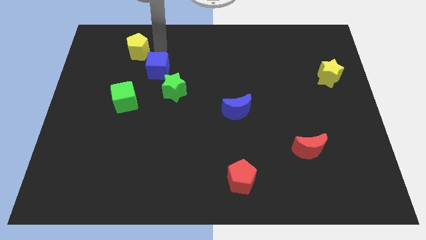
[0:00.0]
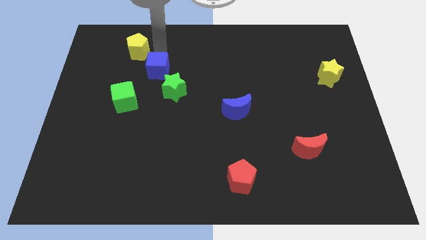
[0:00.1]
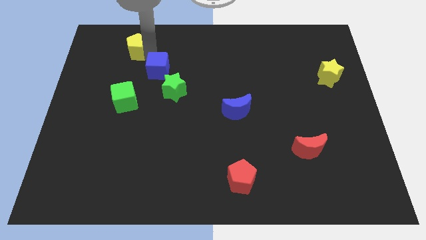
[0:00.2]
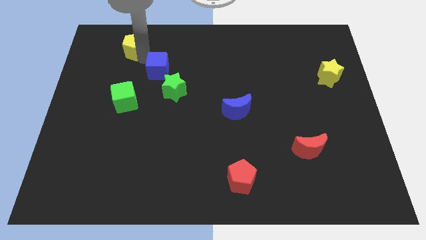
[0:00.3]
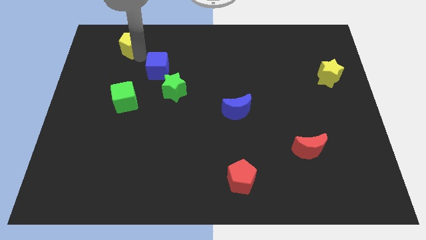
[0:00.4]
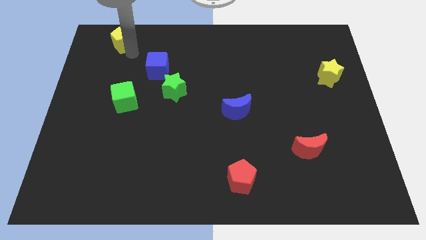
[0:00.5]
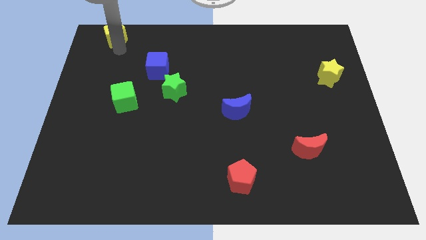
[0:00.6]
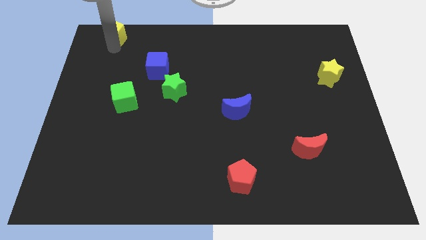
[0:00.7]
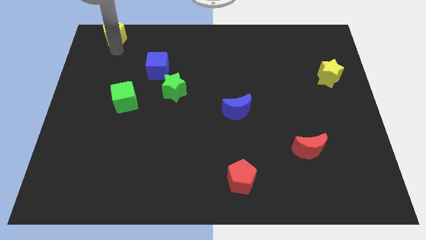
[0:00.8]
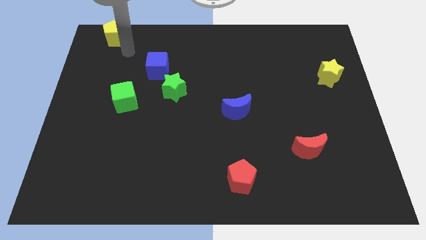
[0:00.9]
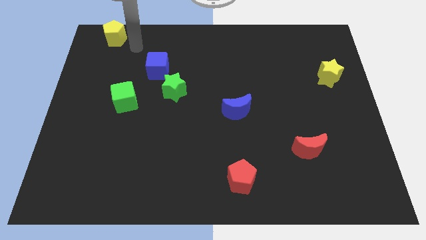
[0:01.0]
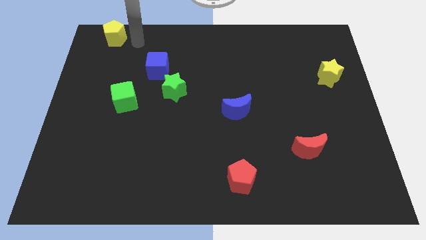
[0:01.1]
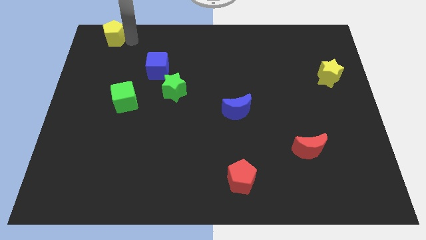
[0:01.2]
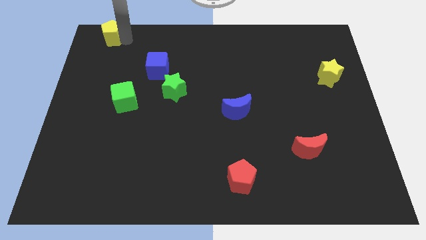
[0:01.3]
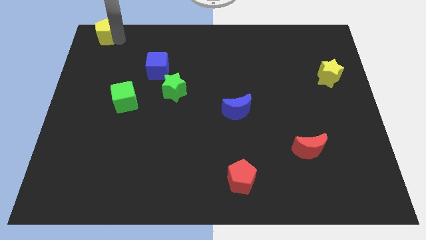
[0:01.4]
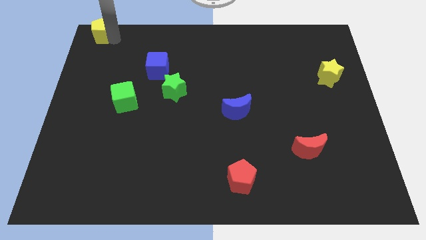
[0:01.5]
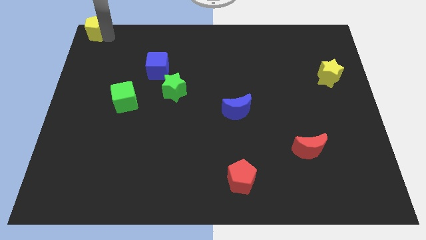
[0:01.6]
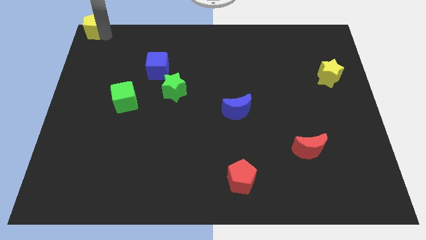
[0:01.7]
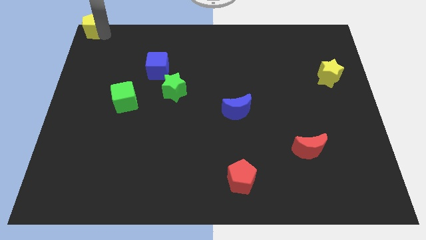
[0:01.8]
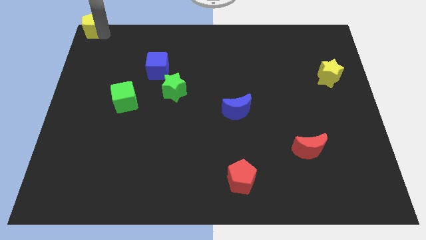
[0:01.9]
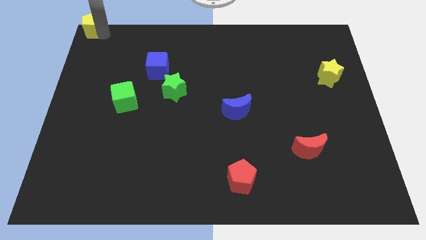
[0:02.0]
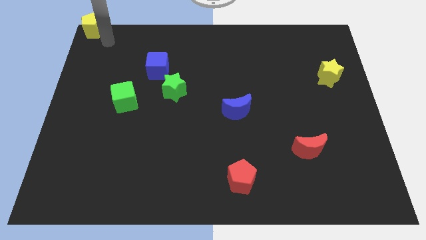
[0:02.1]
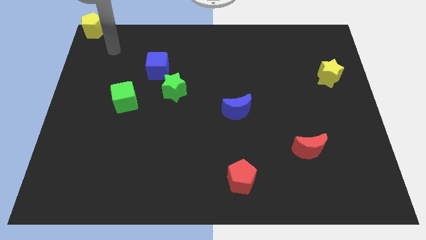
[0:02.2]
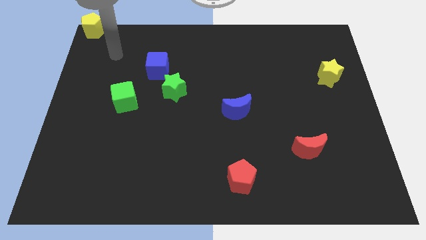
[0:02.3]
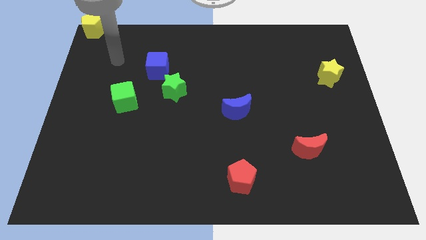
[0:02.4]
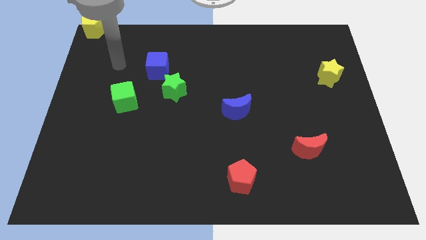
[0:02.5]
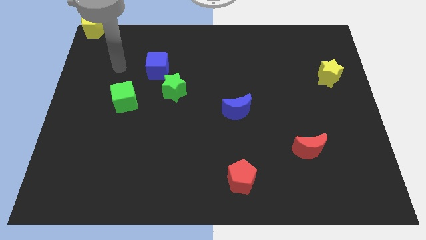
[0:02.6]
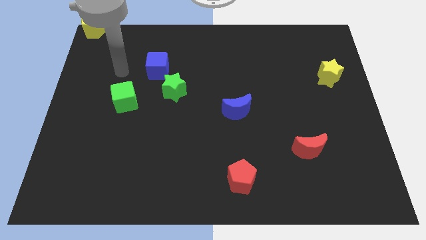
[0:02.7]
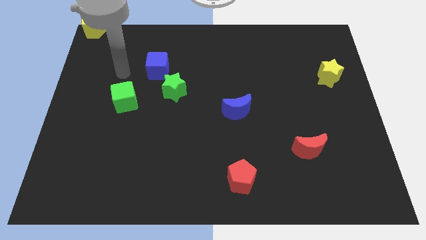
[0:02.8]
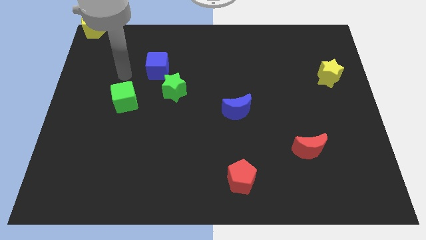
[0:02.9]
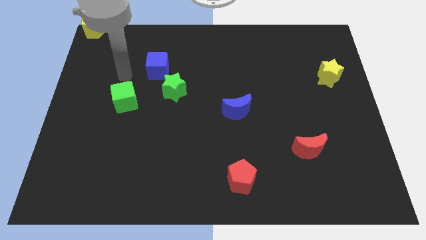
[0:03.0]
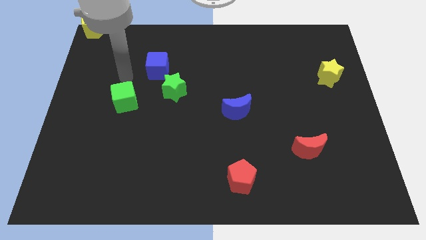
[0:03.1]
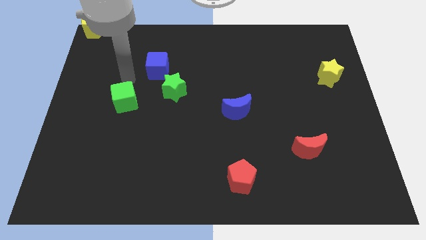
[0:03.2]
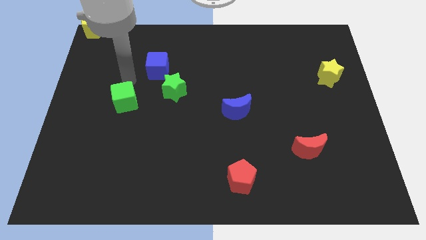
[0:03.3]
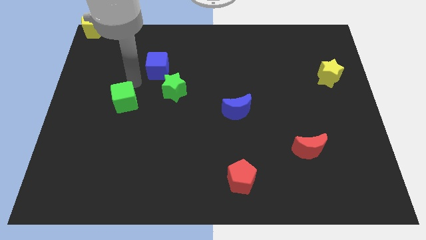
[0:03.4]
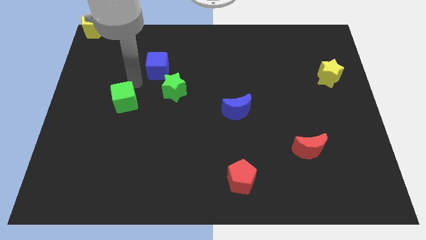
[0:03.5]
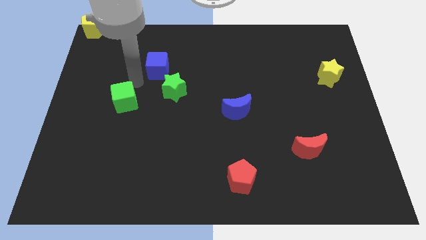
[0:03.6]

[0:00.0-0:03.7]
move the yellow pentagon top left side of the board

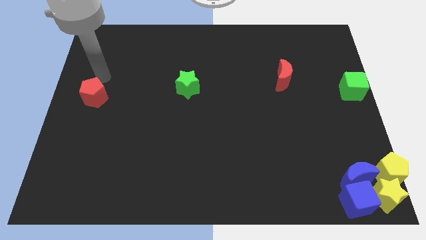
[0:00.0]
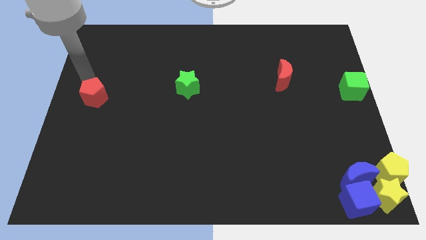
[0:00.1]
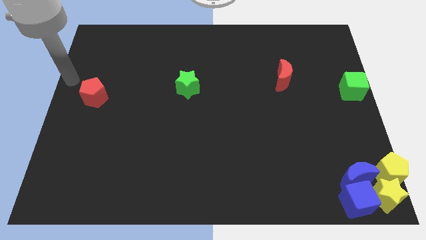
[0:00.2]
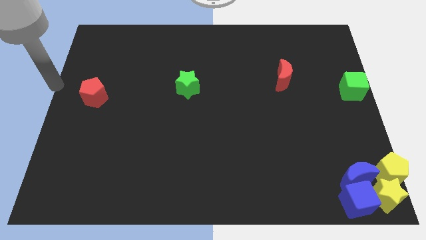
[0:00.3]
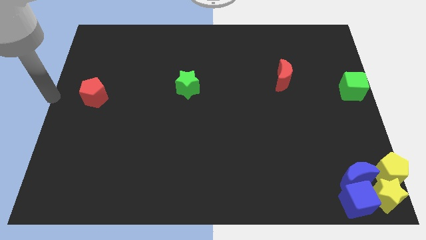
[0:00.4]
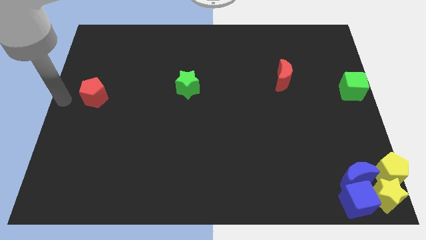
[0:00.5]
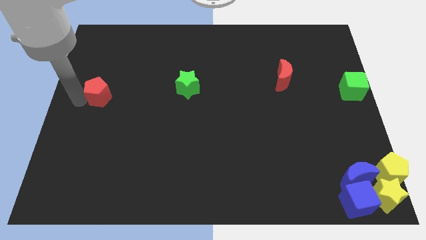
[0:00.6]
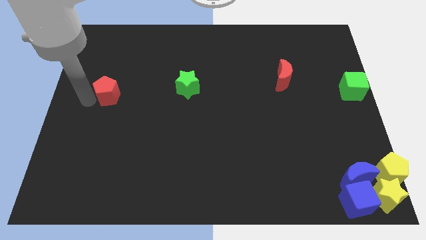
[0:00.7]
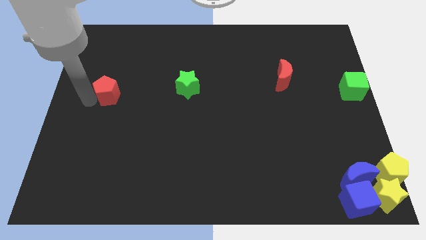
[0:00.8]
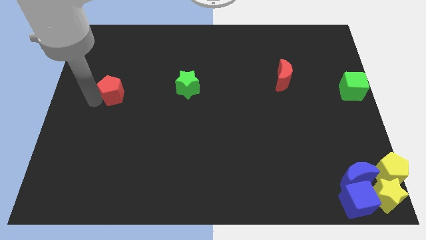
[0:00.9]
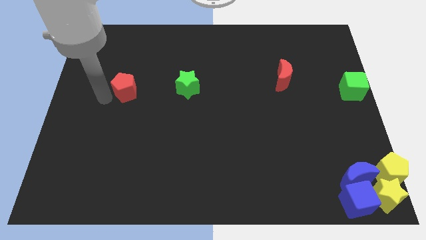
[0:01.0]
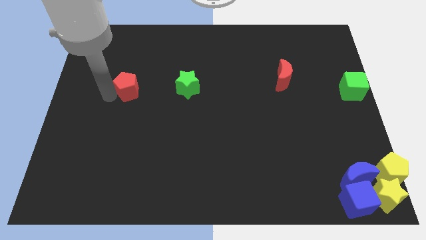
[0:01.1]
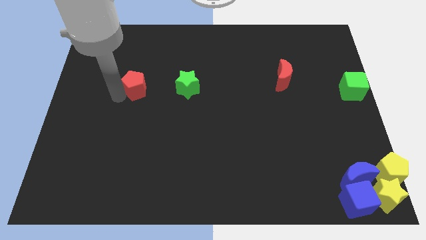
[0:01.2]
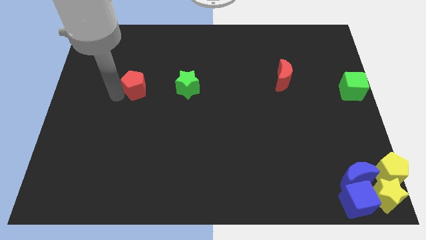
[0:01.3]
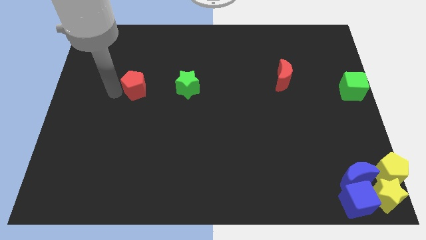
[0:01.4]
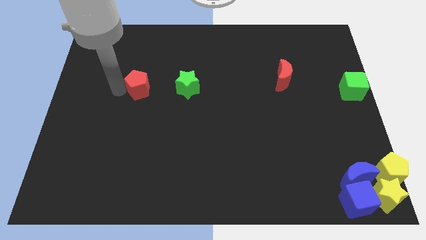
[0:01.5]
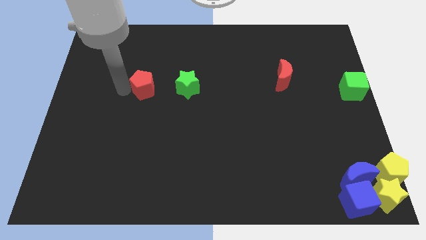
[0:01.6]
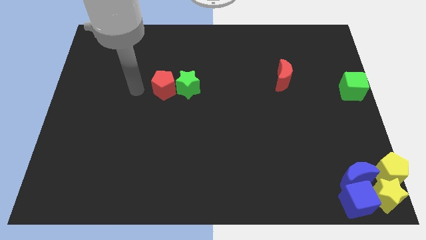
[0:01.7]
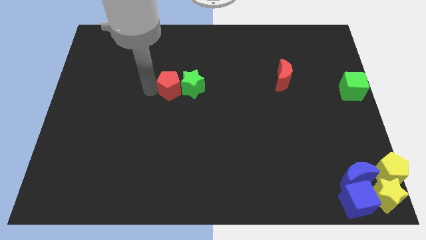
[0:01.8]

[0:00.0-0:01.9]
place the red pentagon left to the green star

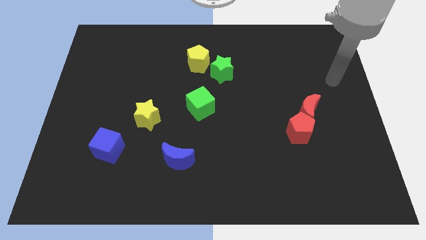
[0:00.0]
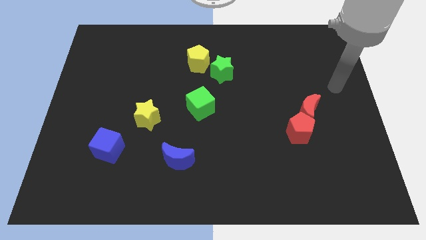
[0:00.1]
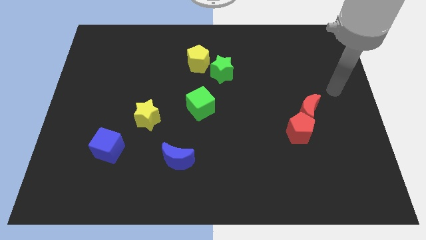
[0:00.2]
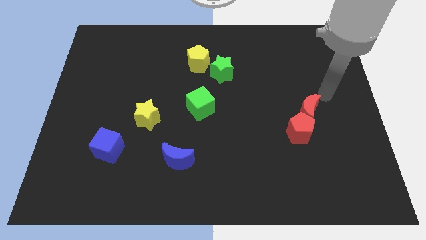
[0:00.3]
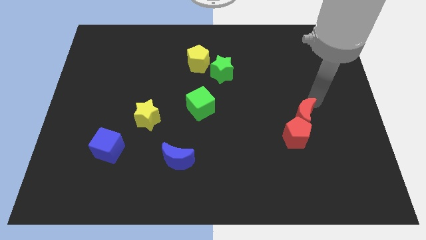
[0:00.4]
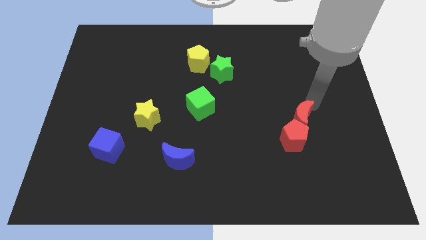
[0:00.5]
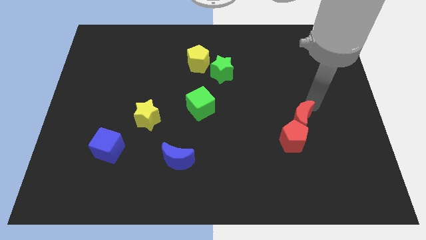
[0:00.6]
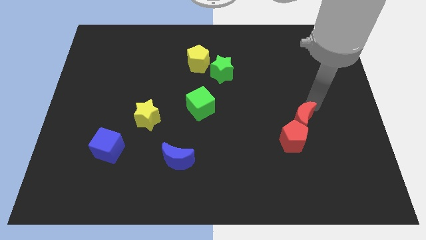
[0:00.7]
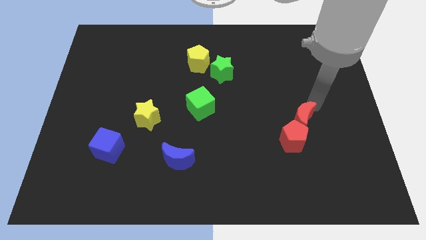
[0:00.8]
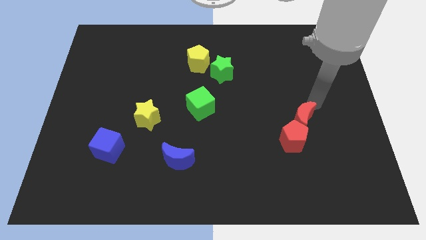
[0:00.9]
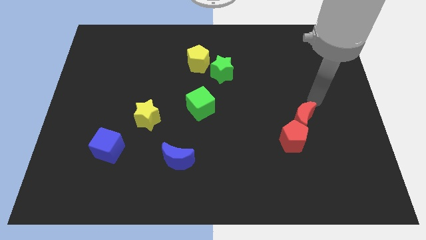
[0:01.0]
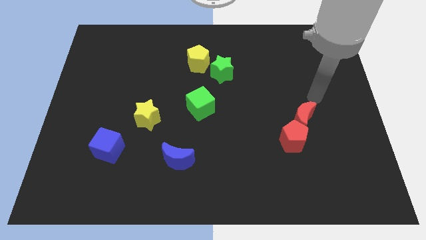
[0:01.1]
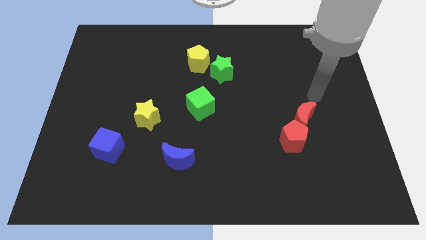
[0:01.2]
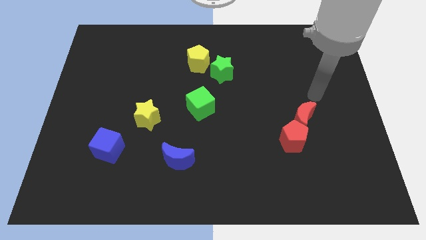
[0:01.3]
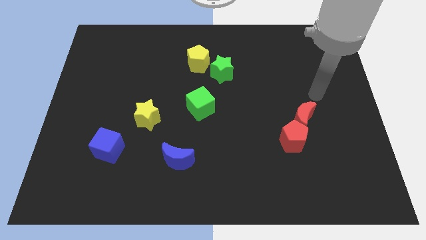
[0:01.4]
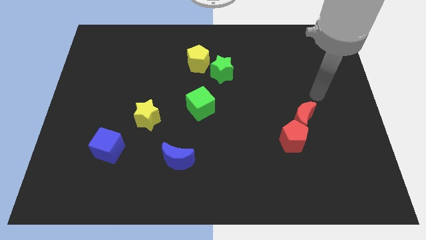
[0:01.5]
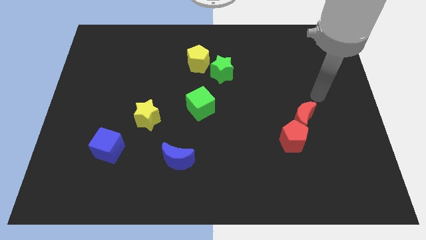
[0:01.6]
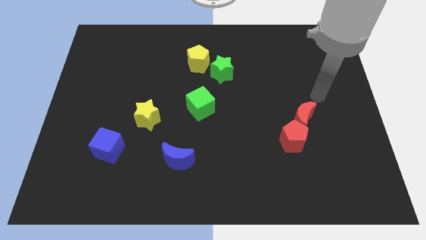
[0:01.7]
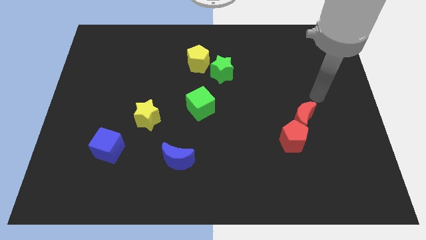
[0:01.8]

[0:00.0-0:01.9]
point your arm above the red moon

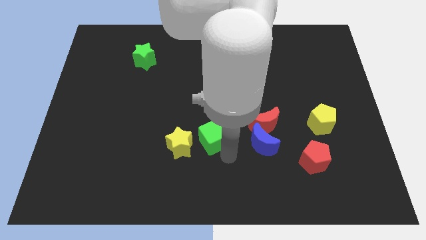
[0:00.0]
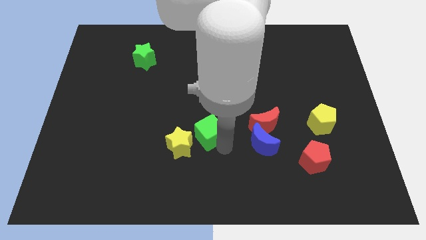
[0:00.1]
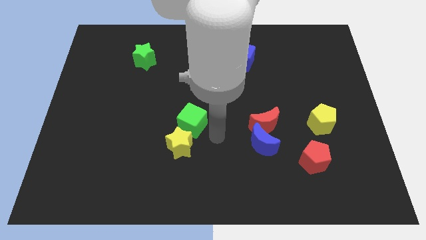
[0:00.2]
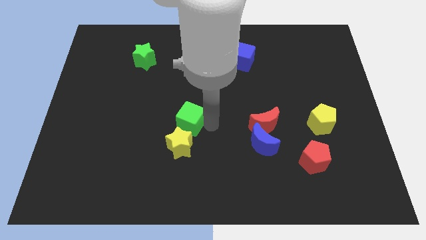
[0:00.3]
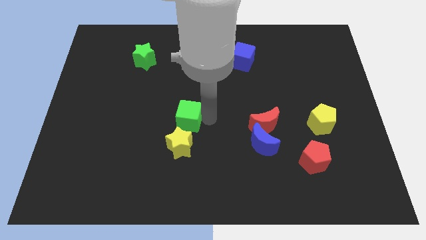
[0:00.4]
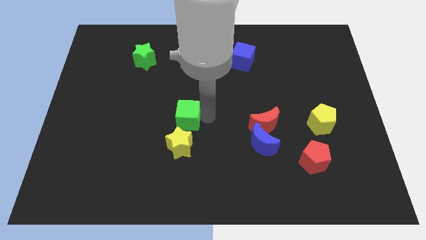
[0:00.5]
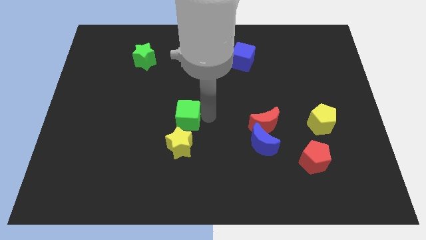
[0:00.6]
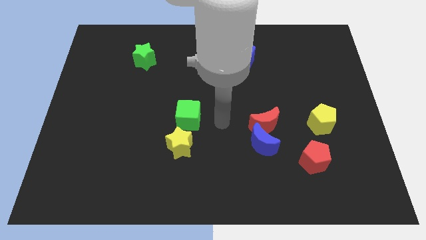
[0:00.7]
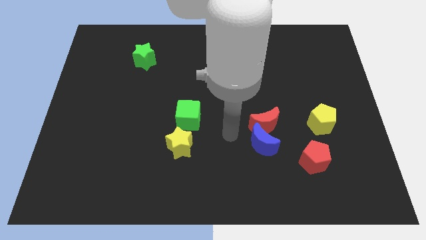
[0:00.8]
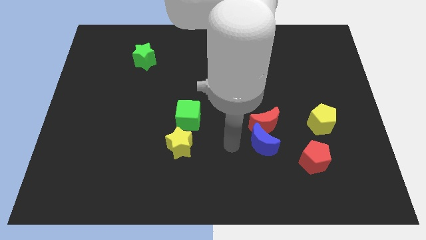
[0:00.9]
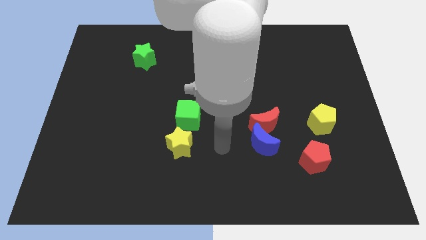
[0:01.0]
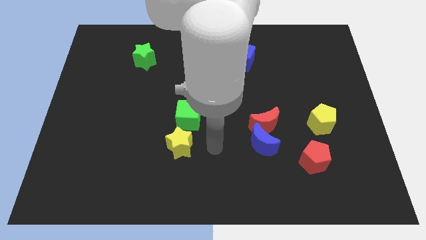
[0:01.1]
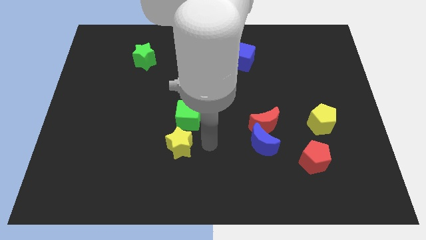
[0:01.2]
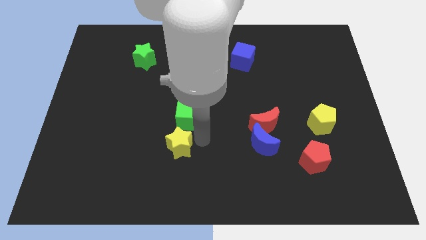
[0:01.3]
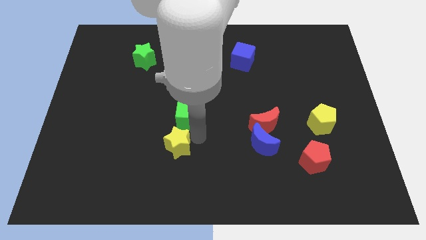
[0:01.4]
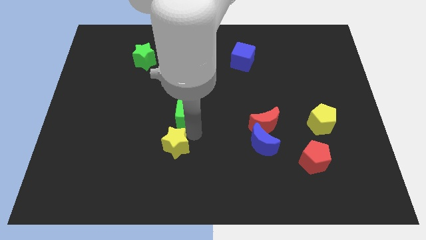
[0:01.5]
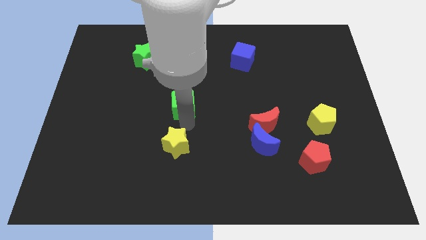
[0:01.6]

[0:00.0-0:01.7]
push the green cube above the yellow star
